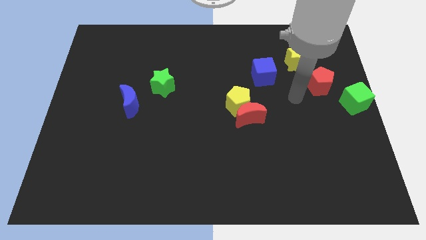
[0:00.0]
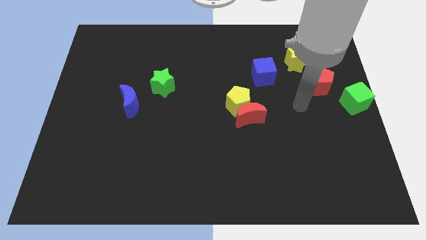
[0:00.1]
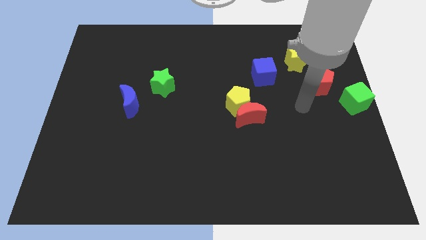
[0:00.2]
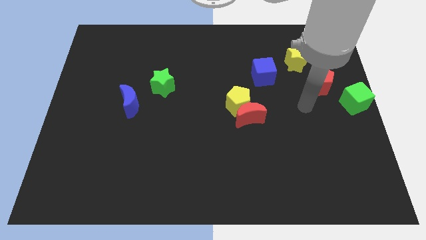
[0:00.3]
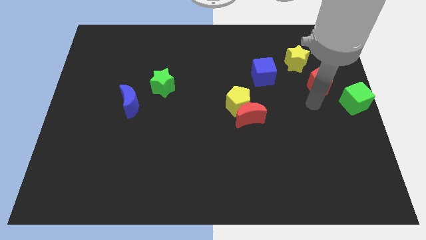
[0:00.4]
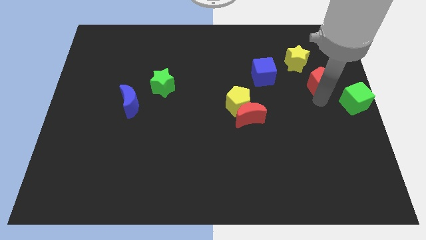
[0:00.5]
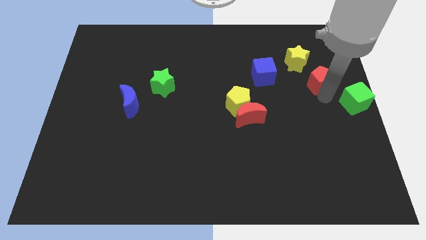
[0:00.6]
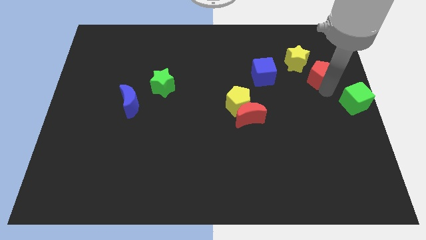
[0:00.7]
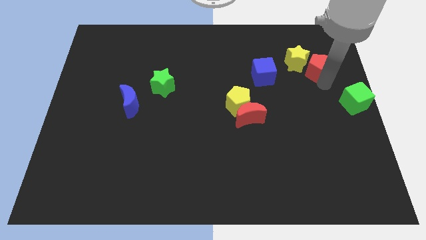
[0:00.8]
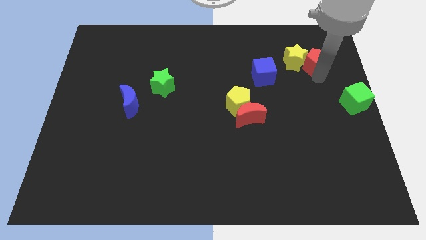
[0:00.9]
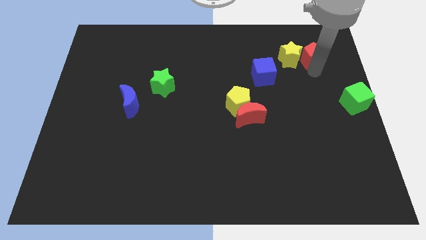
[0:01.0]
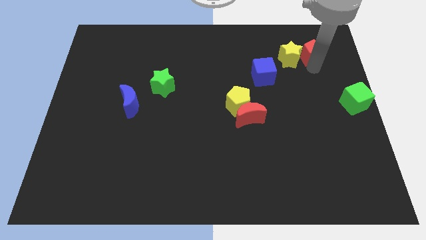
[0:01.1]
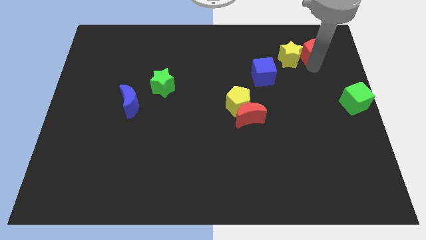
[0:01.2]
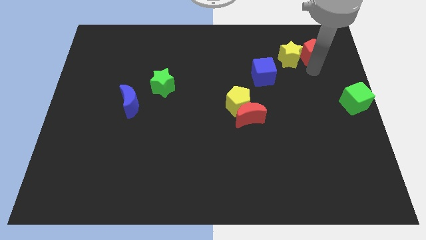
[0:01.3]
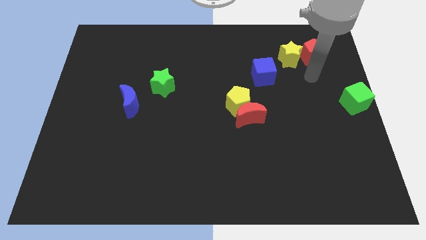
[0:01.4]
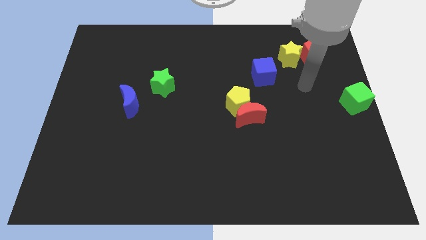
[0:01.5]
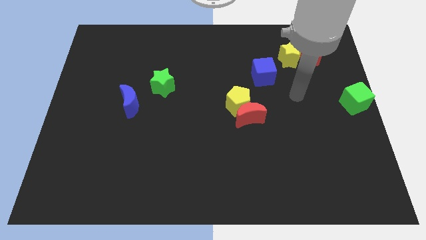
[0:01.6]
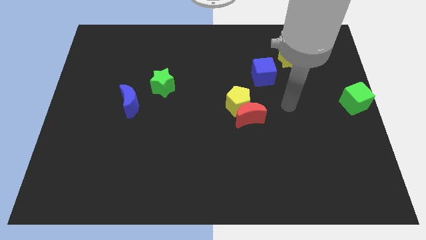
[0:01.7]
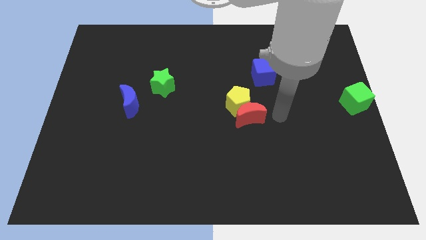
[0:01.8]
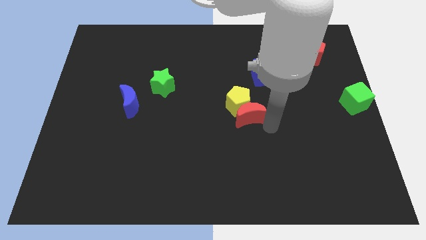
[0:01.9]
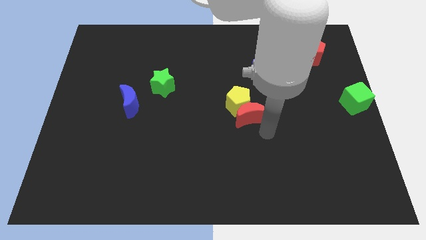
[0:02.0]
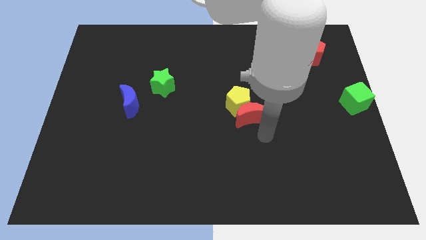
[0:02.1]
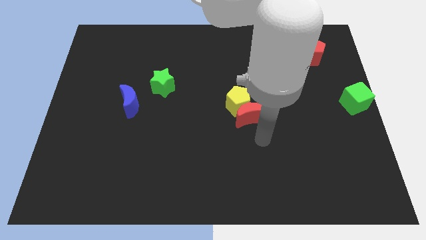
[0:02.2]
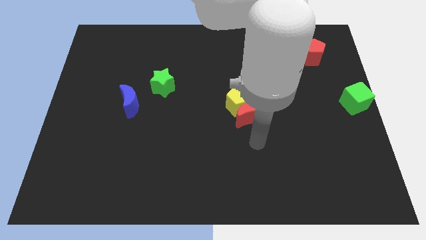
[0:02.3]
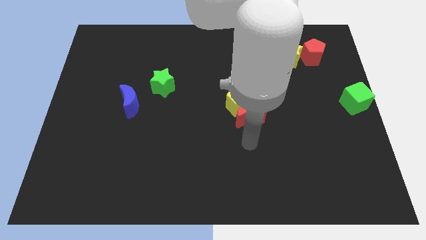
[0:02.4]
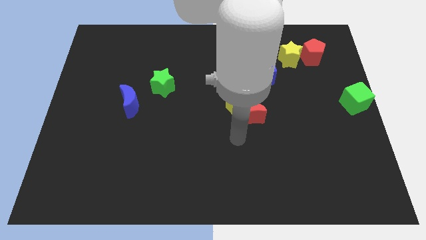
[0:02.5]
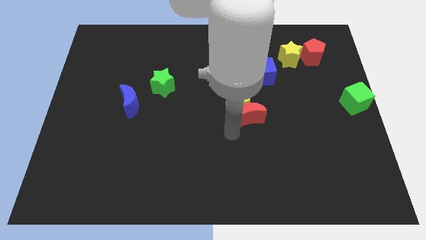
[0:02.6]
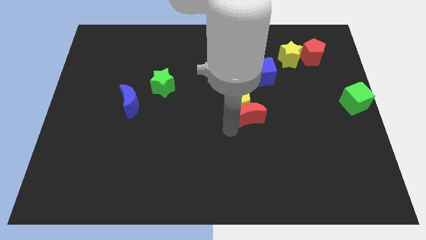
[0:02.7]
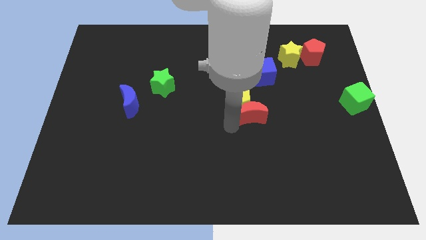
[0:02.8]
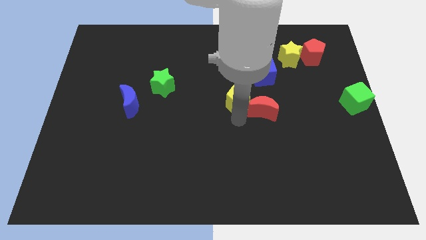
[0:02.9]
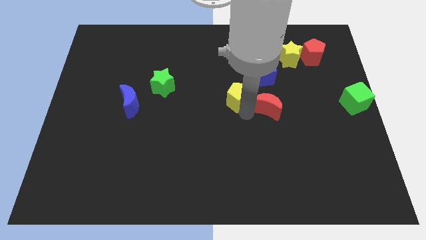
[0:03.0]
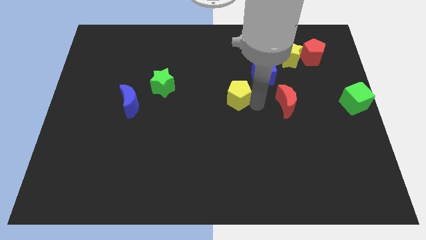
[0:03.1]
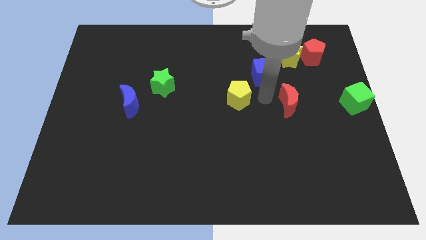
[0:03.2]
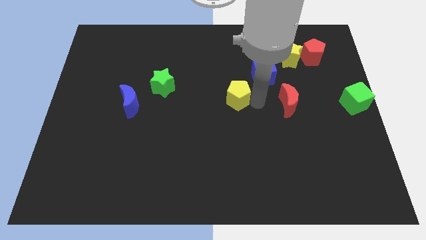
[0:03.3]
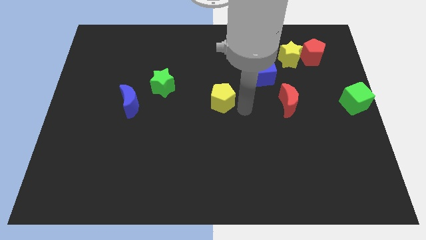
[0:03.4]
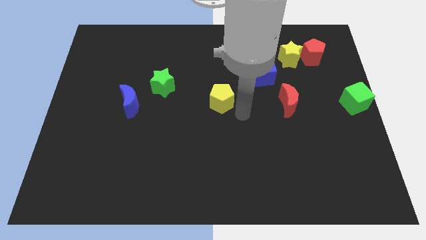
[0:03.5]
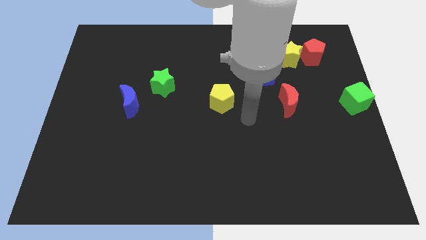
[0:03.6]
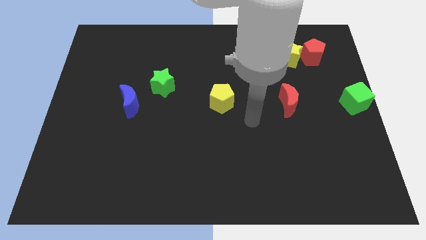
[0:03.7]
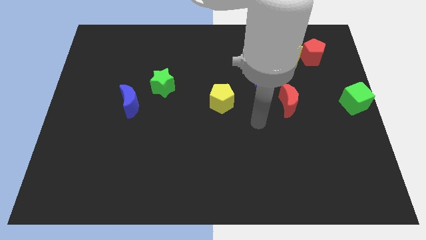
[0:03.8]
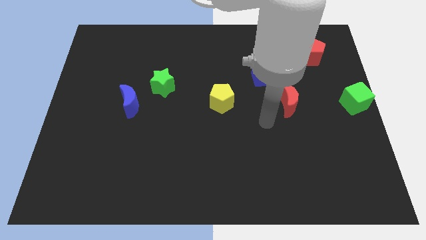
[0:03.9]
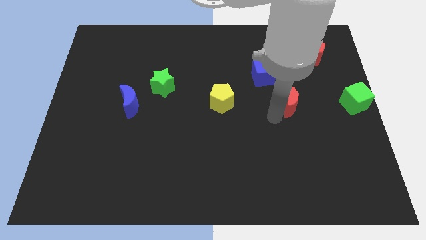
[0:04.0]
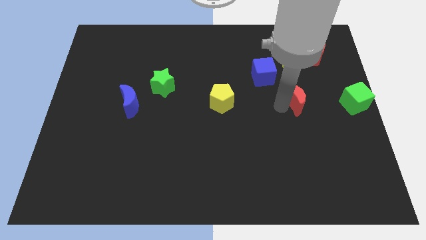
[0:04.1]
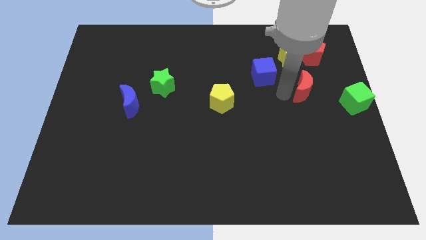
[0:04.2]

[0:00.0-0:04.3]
separate the red moon and the yellow pentagon

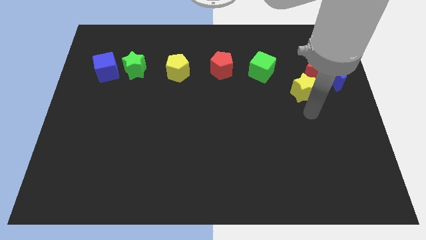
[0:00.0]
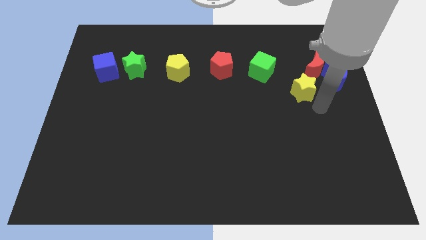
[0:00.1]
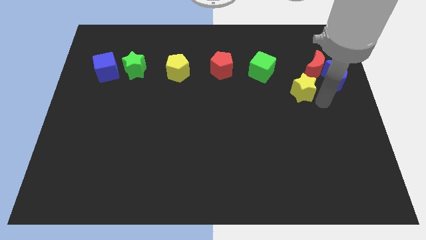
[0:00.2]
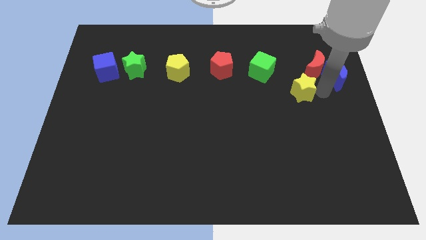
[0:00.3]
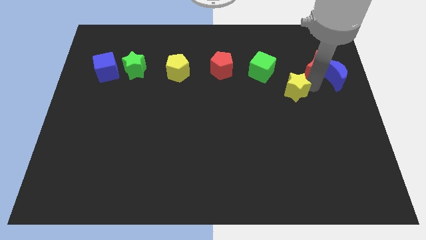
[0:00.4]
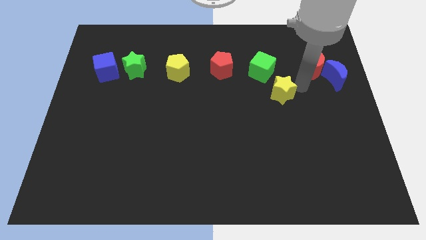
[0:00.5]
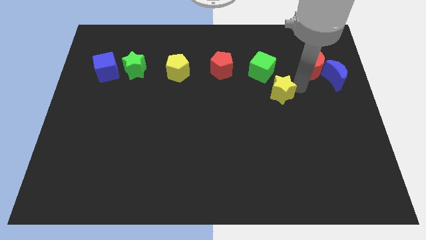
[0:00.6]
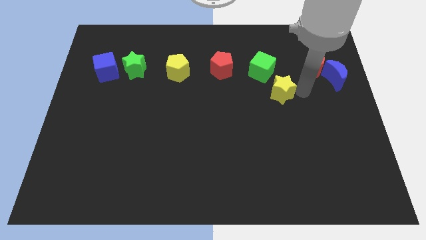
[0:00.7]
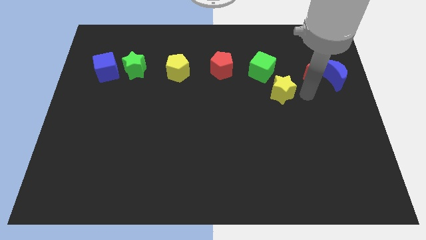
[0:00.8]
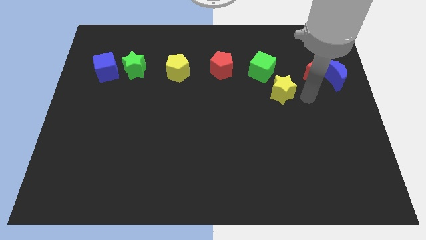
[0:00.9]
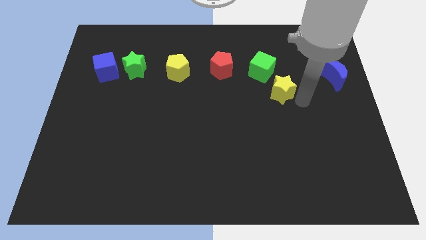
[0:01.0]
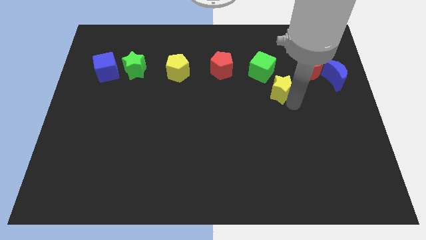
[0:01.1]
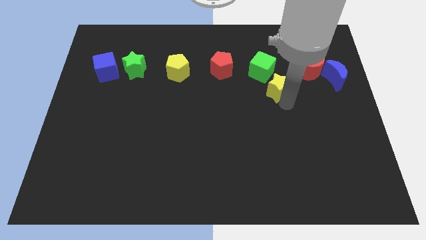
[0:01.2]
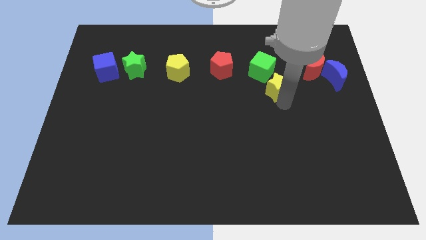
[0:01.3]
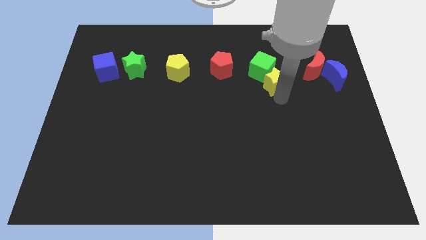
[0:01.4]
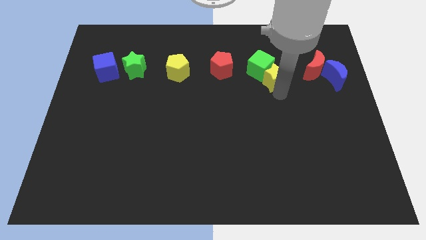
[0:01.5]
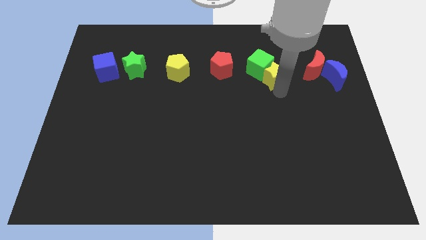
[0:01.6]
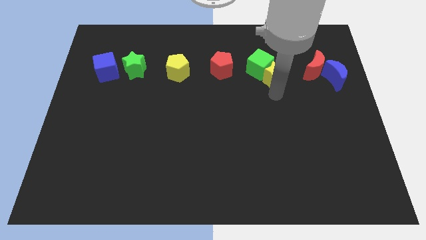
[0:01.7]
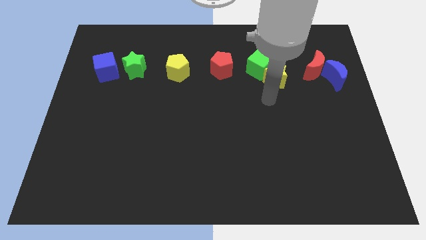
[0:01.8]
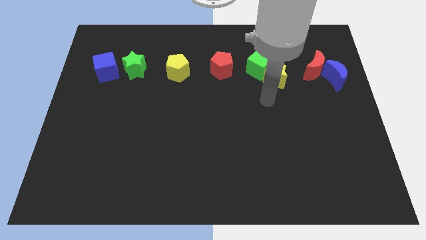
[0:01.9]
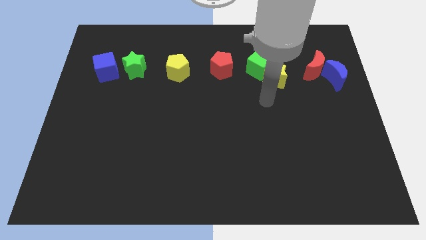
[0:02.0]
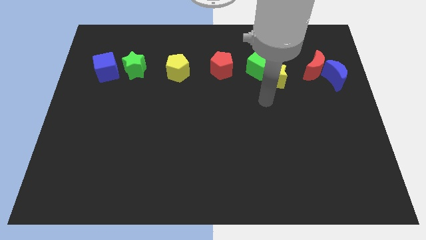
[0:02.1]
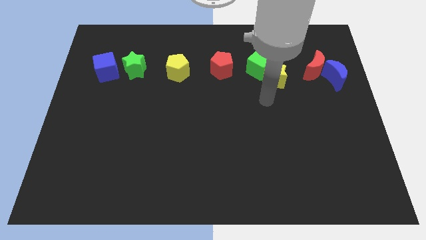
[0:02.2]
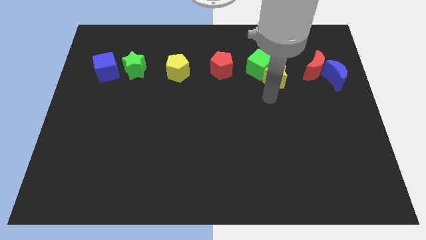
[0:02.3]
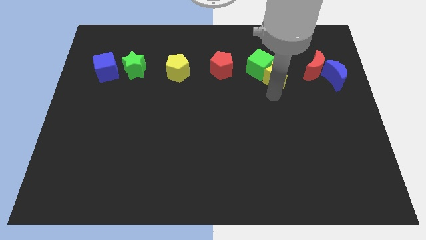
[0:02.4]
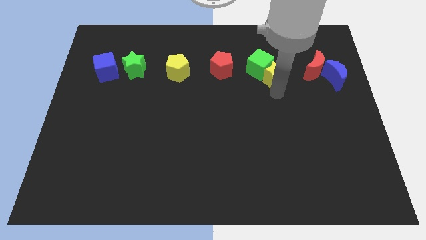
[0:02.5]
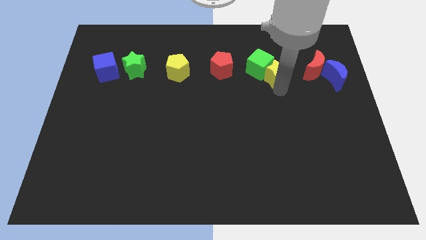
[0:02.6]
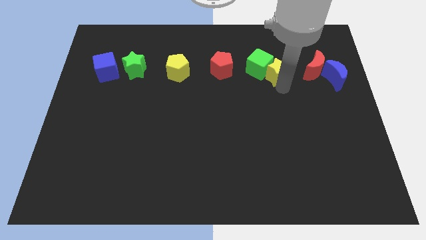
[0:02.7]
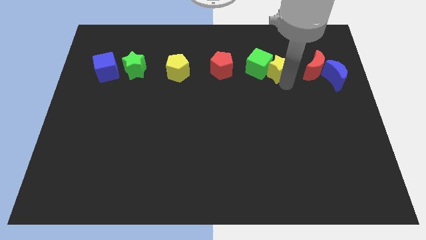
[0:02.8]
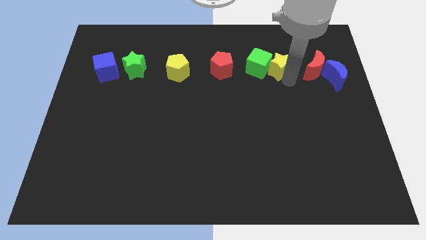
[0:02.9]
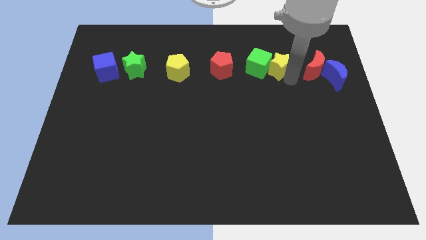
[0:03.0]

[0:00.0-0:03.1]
move the yellow star to the right side of the green cube

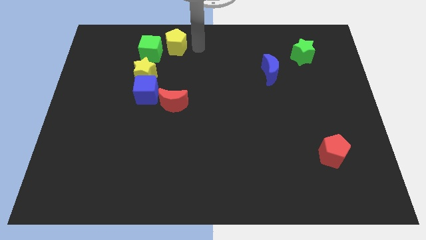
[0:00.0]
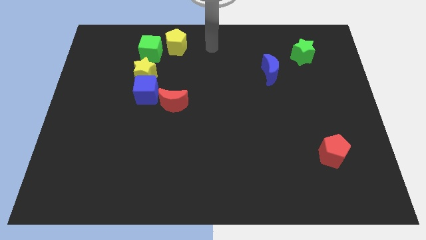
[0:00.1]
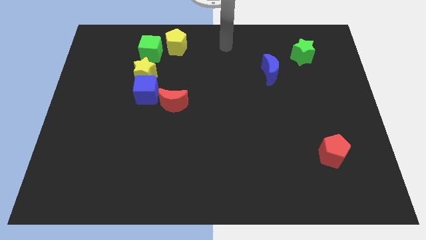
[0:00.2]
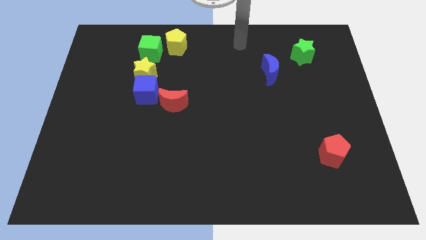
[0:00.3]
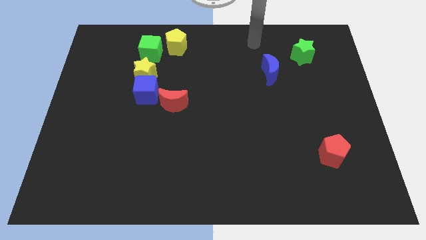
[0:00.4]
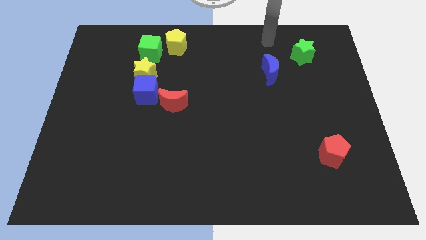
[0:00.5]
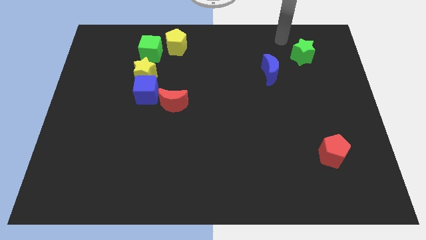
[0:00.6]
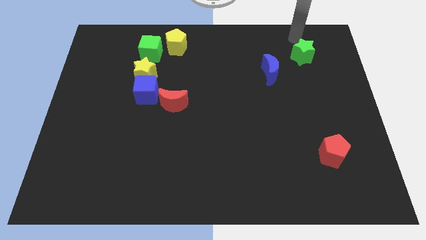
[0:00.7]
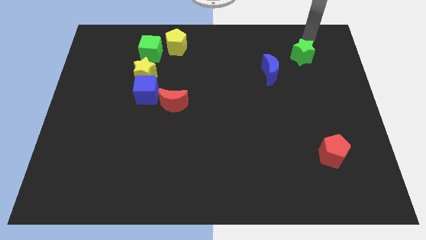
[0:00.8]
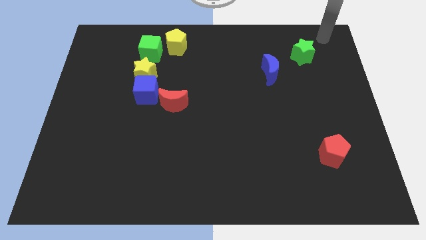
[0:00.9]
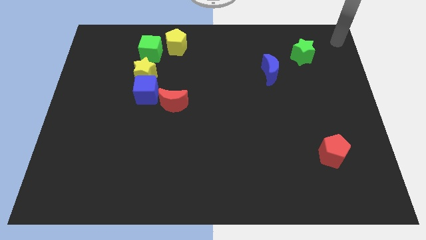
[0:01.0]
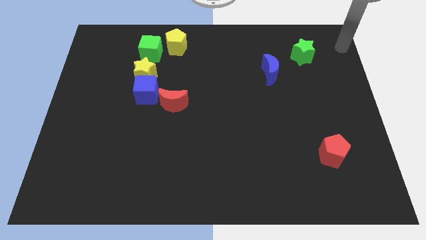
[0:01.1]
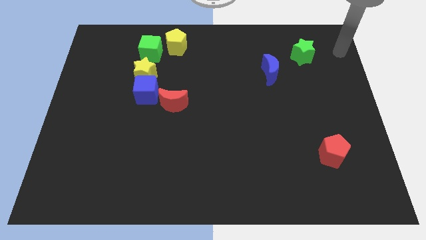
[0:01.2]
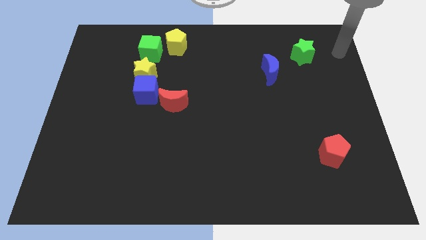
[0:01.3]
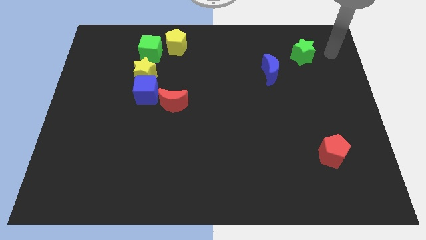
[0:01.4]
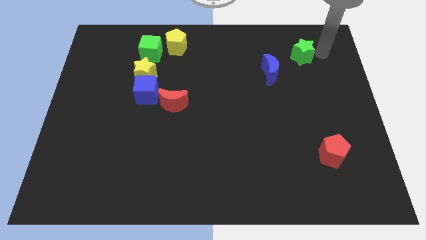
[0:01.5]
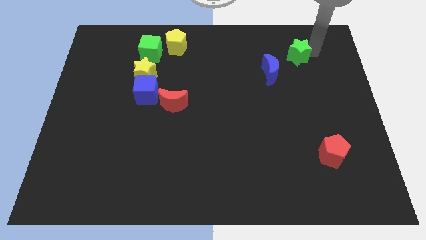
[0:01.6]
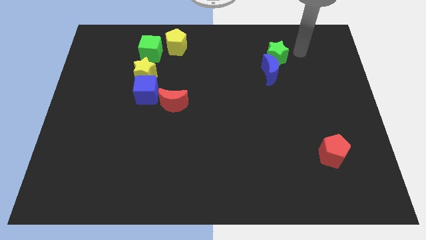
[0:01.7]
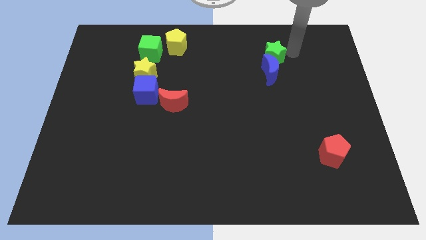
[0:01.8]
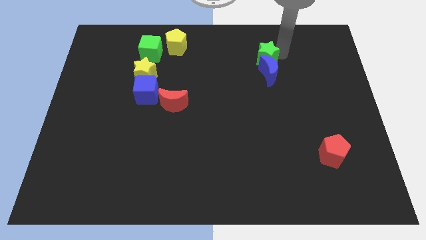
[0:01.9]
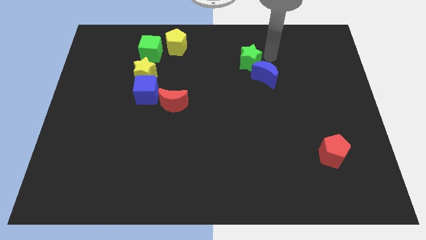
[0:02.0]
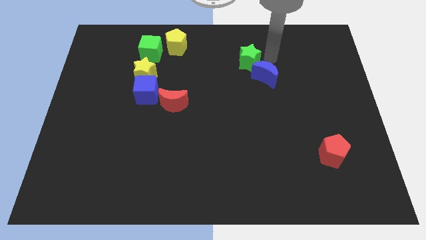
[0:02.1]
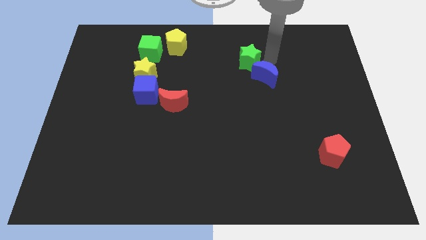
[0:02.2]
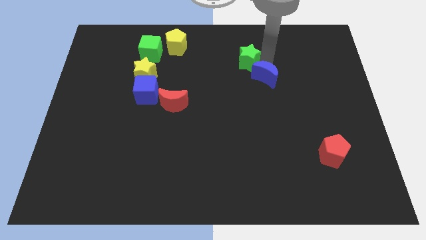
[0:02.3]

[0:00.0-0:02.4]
move the green star into the blue cresccent
